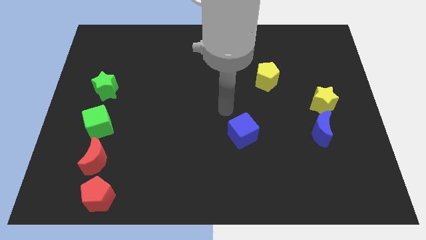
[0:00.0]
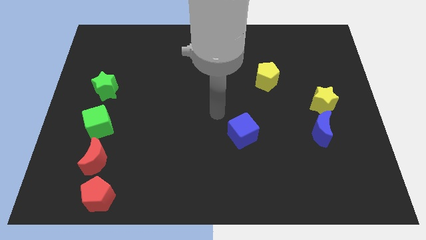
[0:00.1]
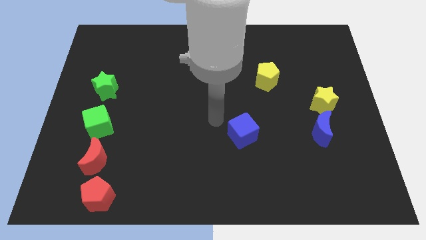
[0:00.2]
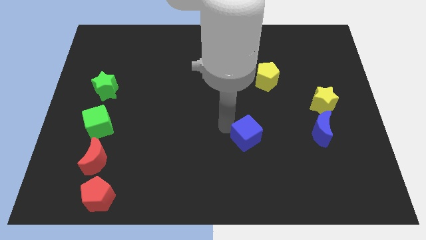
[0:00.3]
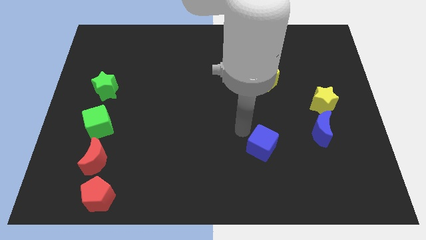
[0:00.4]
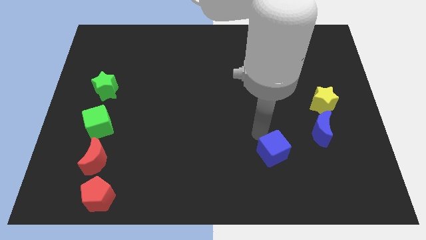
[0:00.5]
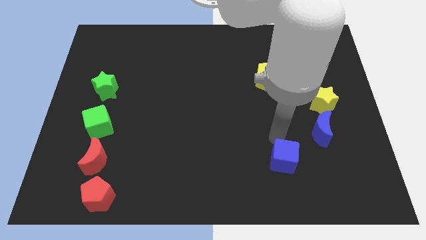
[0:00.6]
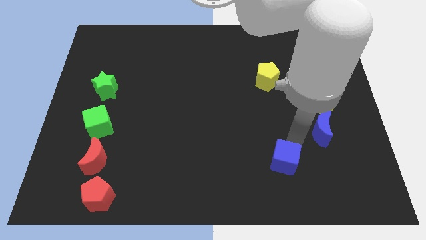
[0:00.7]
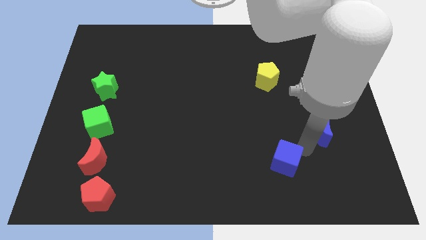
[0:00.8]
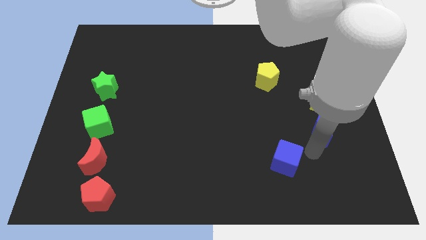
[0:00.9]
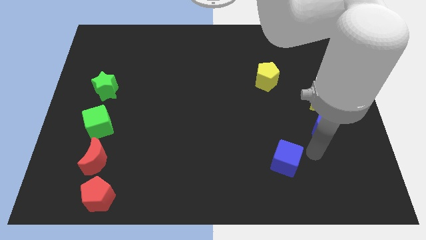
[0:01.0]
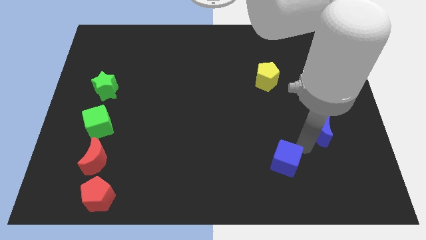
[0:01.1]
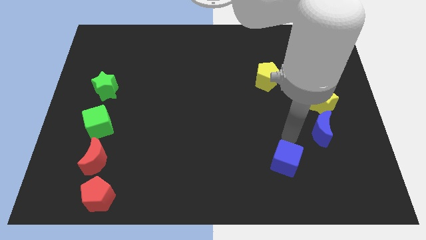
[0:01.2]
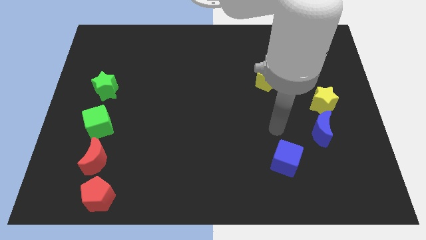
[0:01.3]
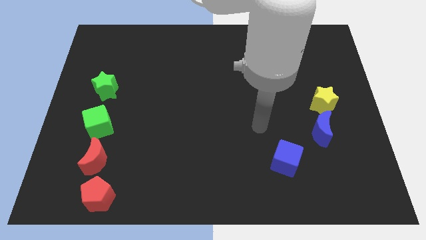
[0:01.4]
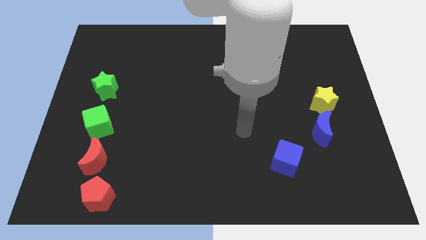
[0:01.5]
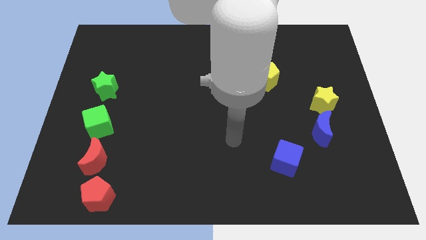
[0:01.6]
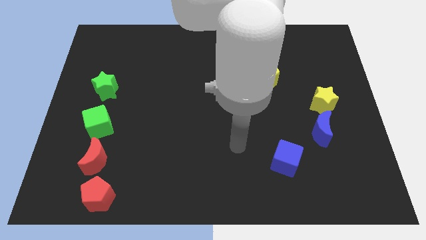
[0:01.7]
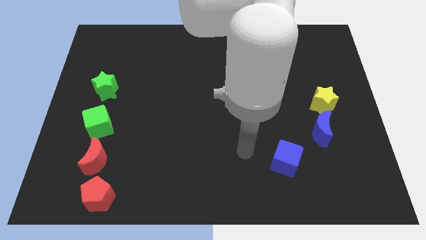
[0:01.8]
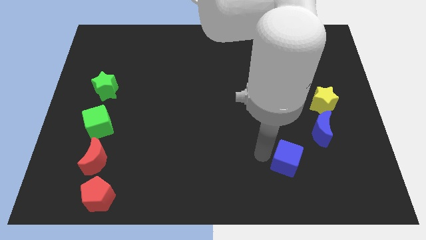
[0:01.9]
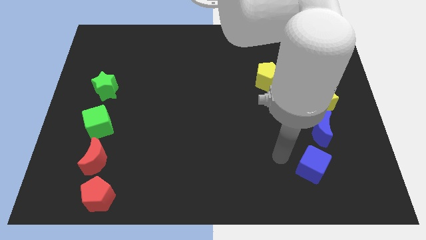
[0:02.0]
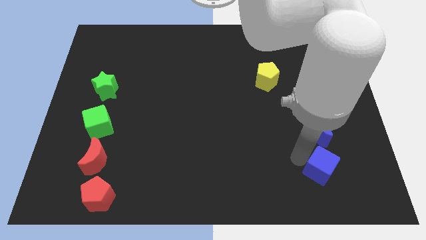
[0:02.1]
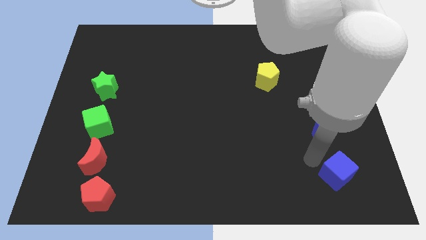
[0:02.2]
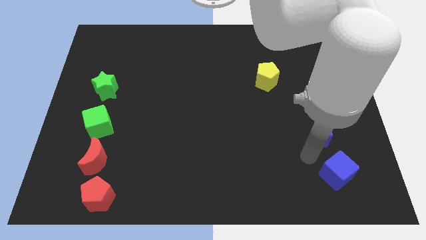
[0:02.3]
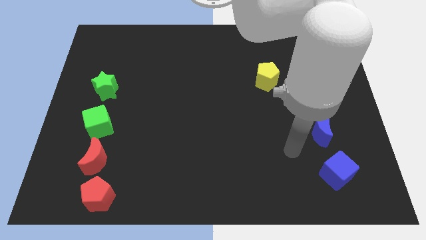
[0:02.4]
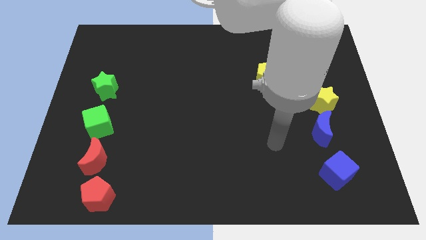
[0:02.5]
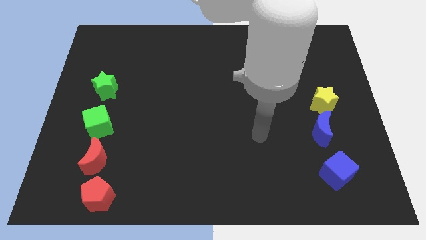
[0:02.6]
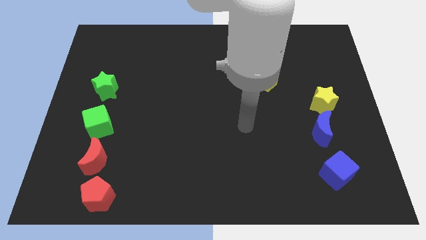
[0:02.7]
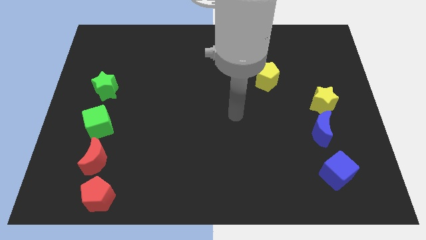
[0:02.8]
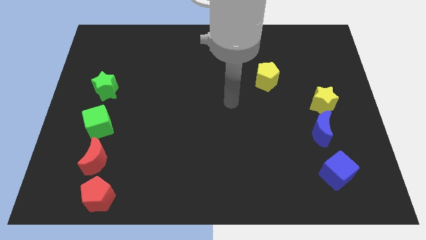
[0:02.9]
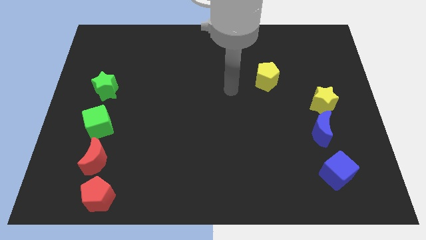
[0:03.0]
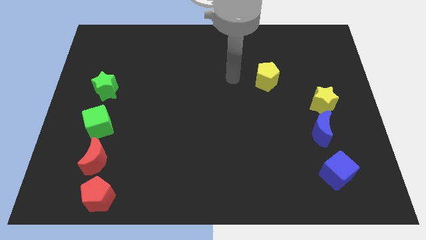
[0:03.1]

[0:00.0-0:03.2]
push blue cube below blue moon

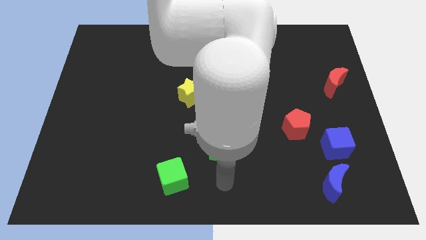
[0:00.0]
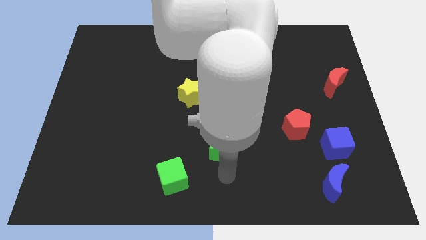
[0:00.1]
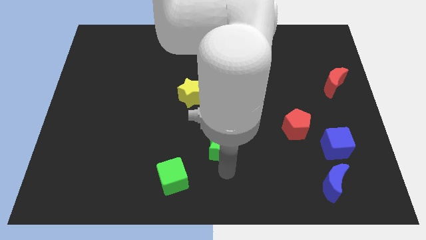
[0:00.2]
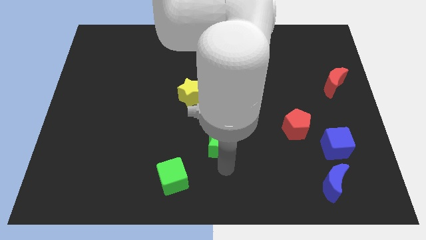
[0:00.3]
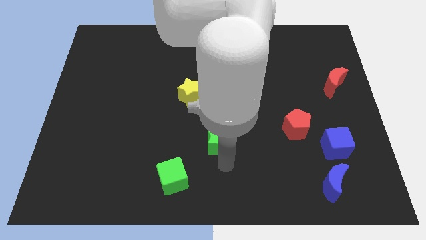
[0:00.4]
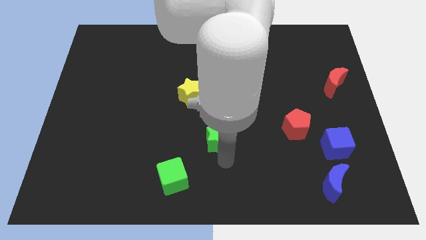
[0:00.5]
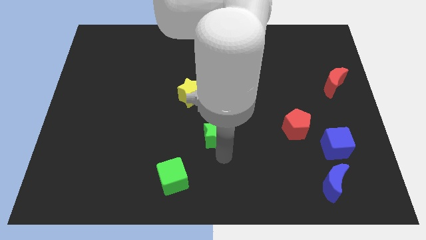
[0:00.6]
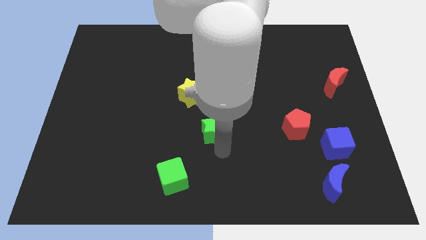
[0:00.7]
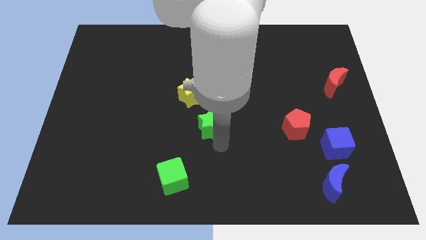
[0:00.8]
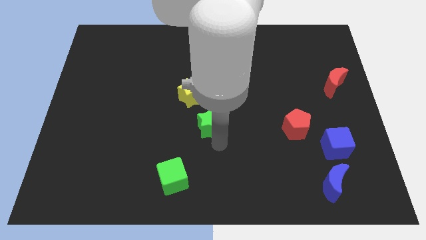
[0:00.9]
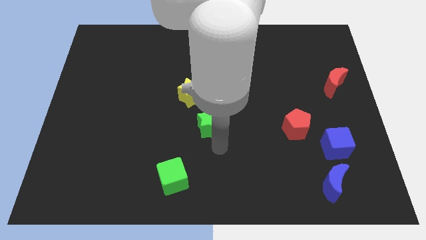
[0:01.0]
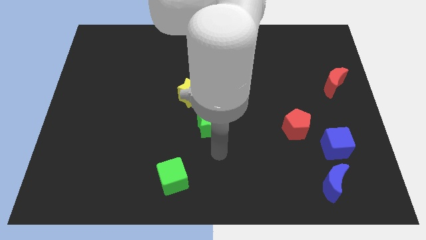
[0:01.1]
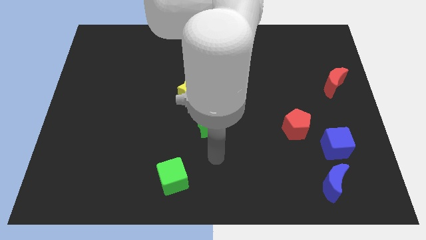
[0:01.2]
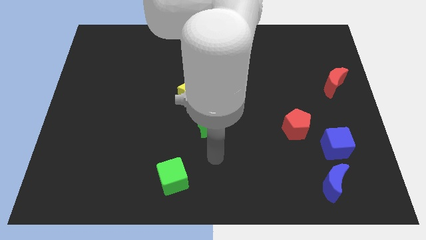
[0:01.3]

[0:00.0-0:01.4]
place the green star left to the red pentagon

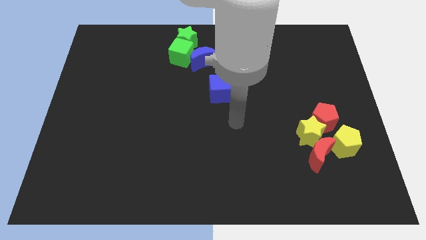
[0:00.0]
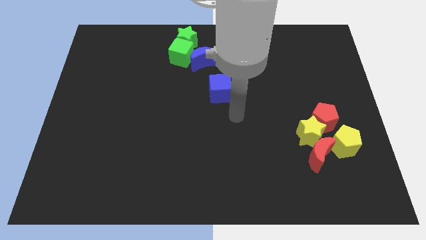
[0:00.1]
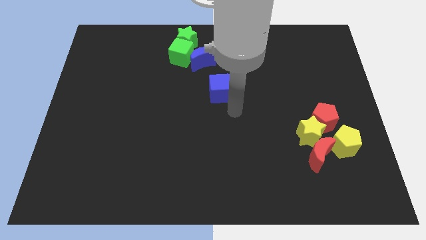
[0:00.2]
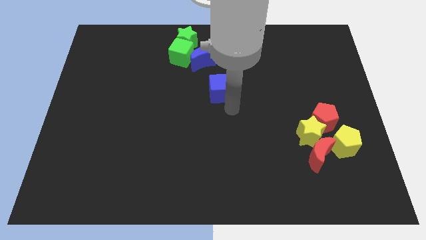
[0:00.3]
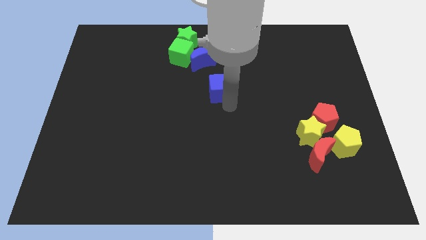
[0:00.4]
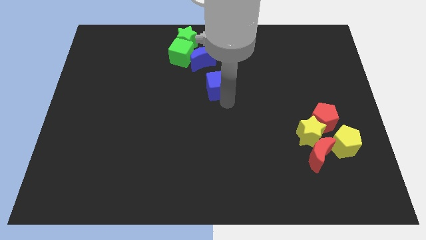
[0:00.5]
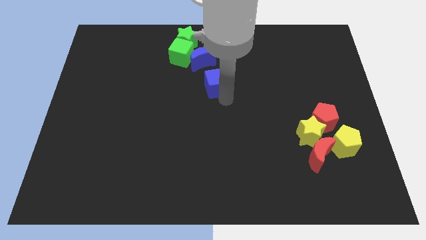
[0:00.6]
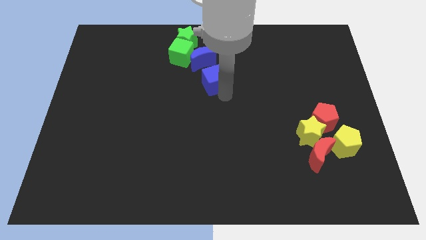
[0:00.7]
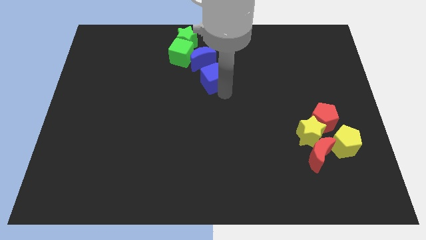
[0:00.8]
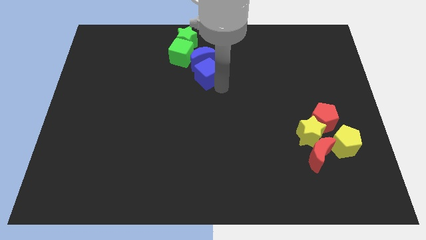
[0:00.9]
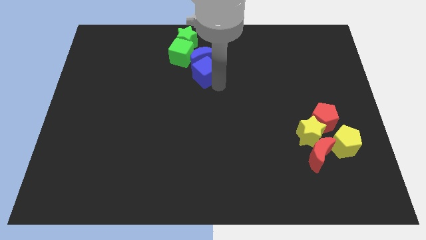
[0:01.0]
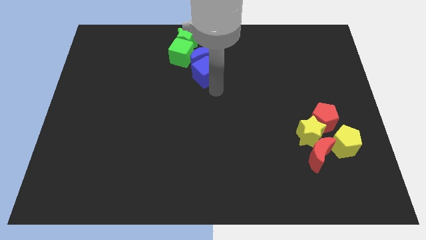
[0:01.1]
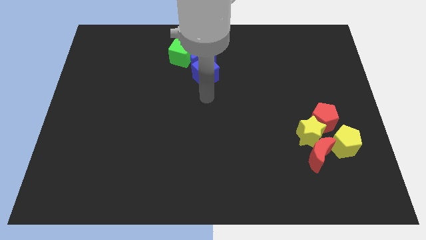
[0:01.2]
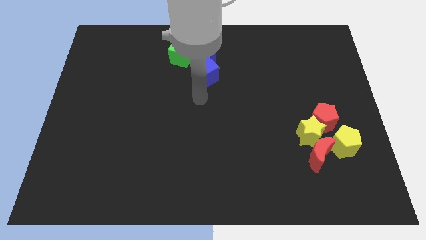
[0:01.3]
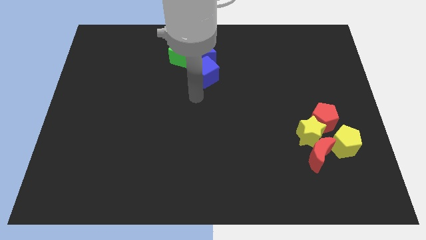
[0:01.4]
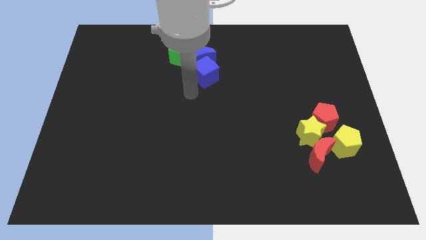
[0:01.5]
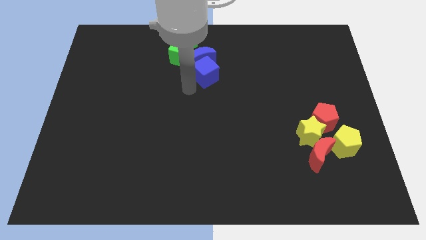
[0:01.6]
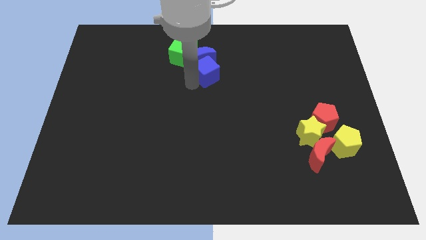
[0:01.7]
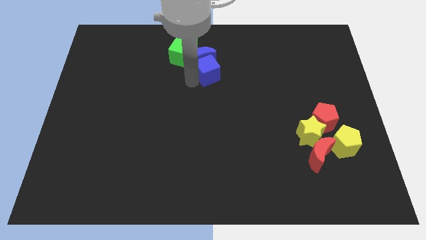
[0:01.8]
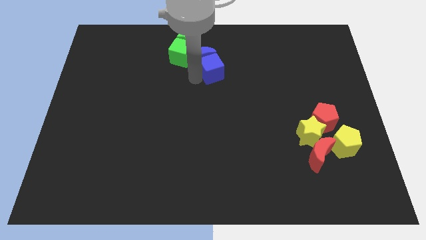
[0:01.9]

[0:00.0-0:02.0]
push the blue cube into the blue moon

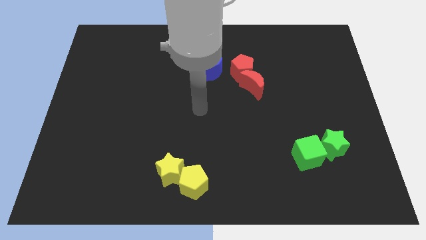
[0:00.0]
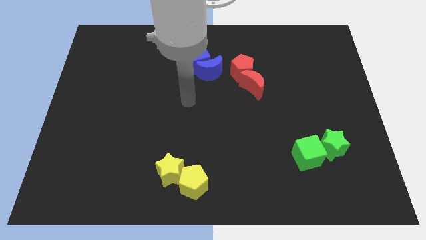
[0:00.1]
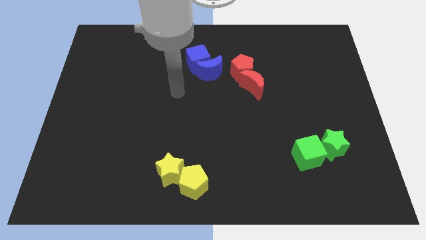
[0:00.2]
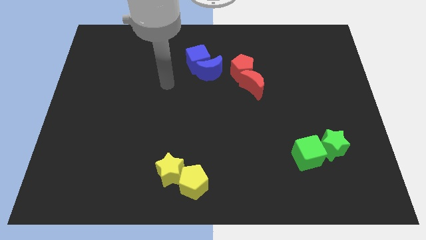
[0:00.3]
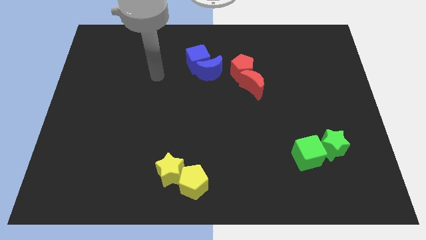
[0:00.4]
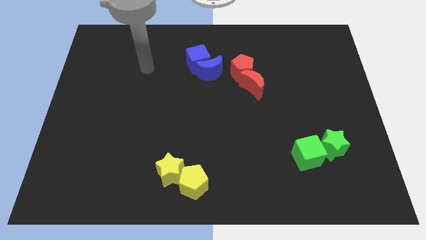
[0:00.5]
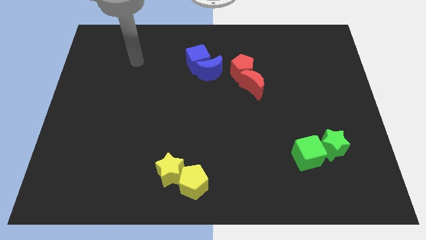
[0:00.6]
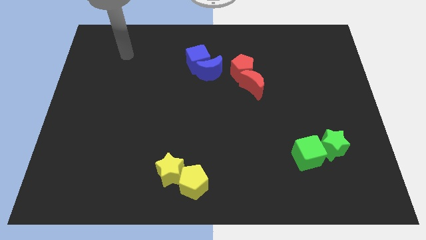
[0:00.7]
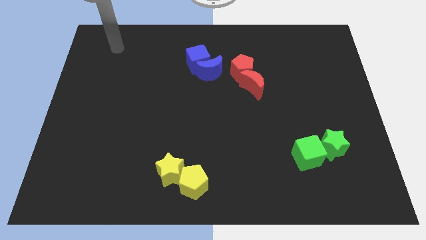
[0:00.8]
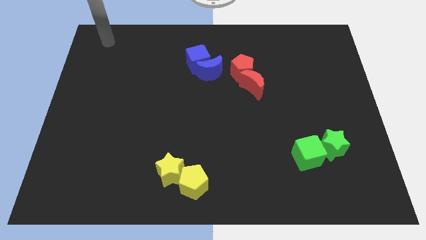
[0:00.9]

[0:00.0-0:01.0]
move your hand to the top left corner

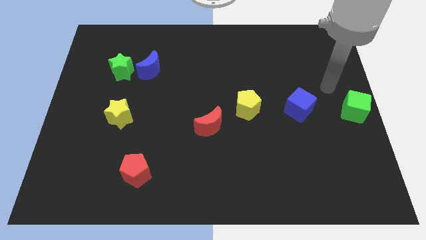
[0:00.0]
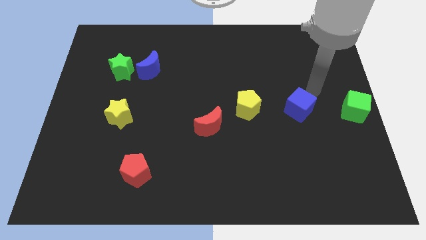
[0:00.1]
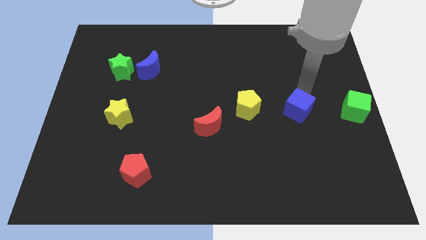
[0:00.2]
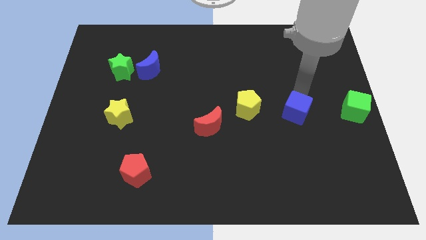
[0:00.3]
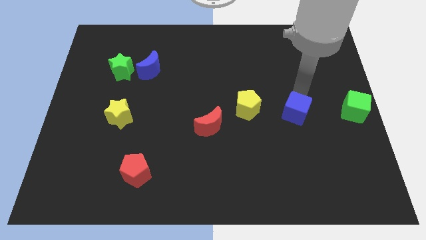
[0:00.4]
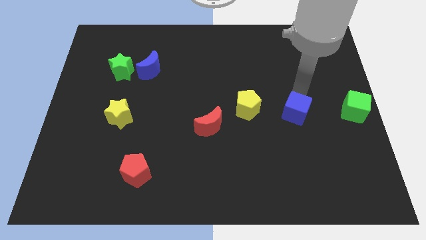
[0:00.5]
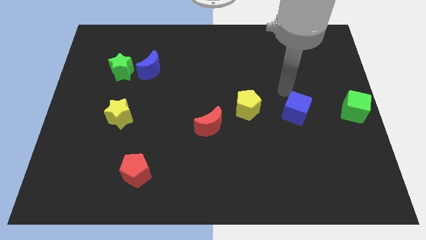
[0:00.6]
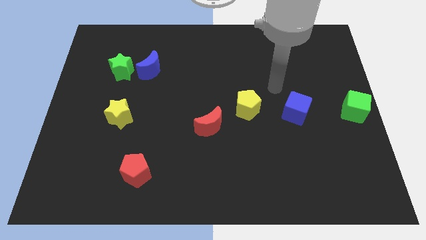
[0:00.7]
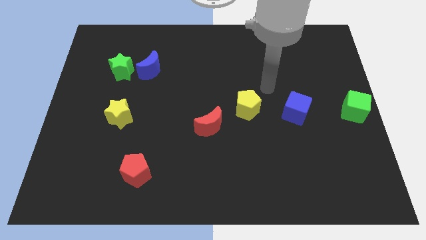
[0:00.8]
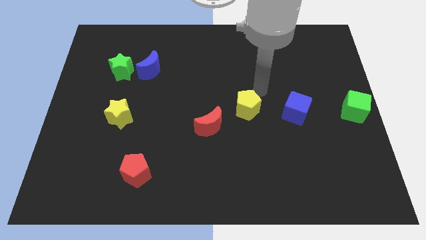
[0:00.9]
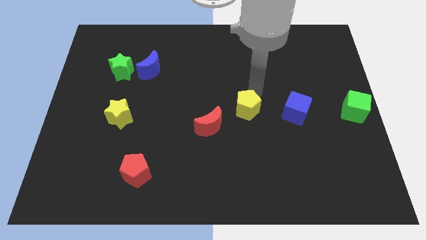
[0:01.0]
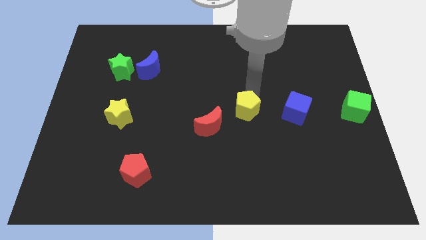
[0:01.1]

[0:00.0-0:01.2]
slightly push the blue cube

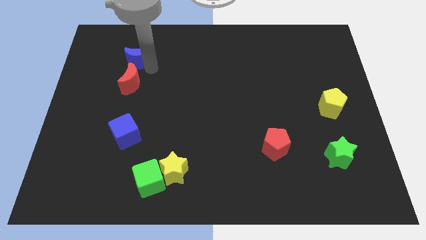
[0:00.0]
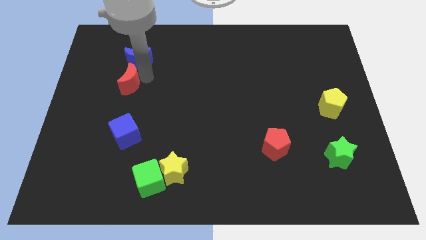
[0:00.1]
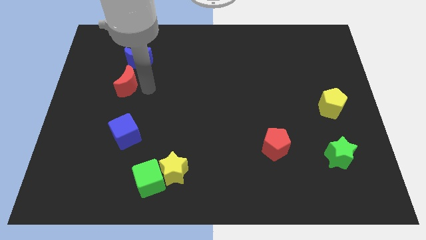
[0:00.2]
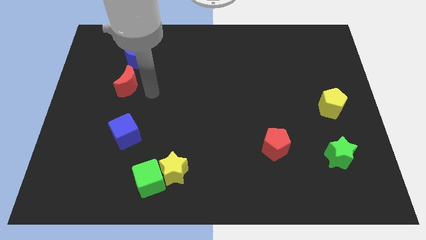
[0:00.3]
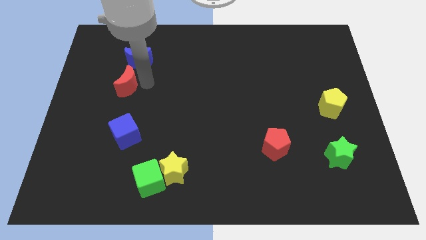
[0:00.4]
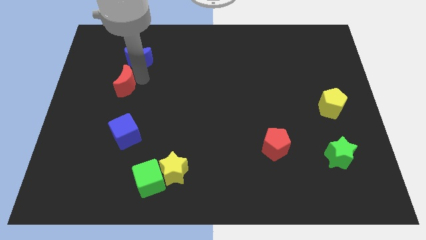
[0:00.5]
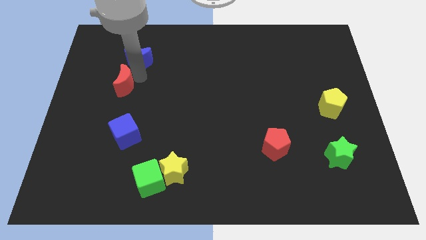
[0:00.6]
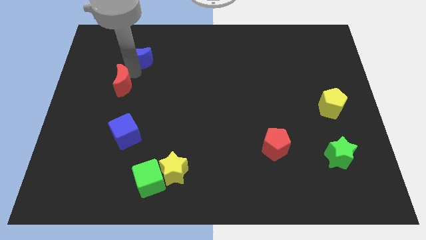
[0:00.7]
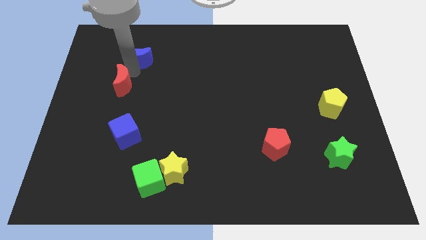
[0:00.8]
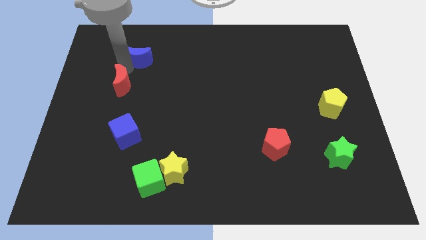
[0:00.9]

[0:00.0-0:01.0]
separate red moon from blue crescent
